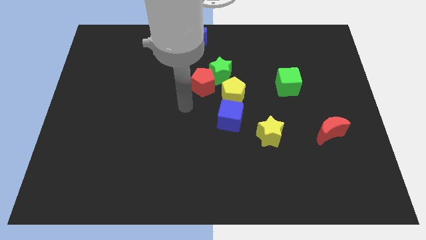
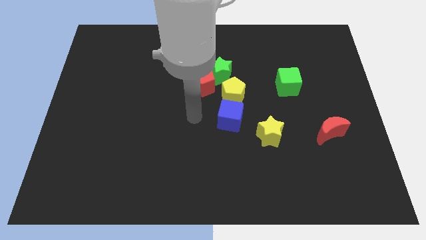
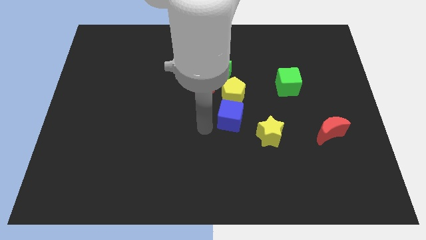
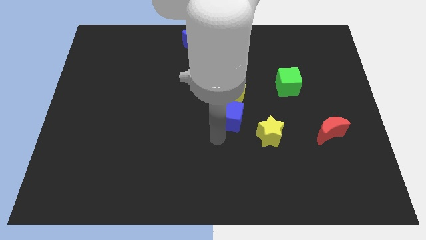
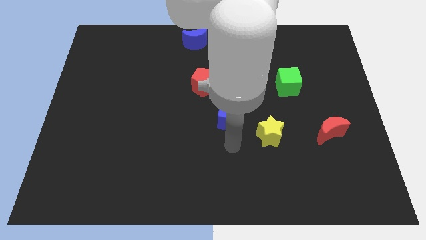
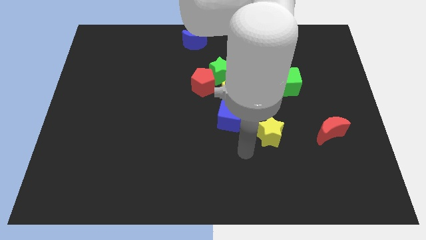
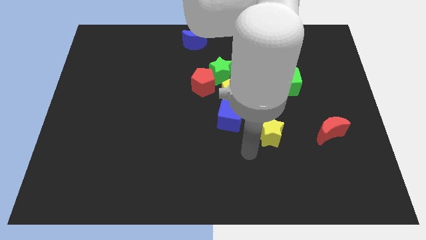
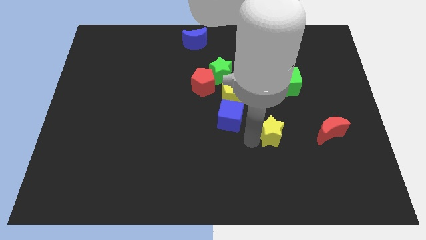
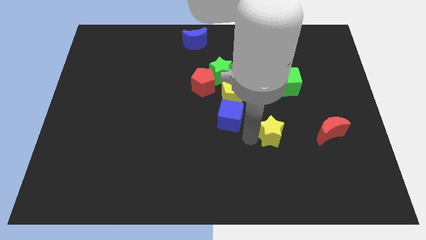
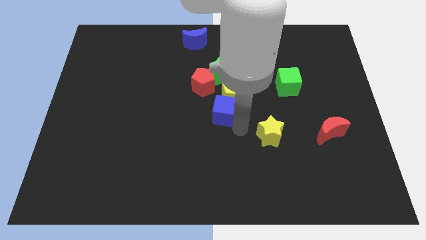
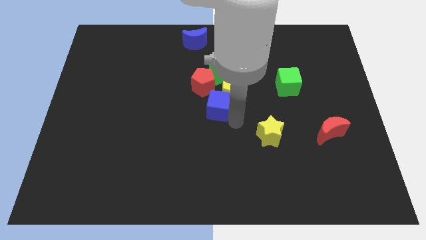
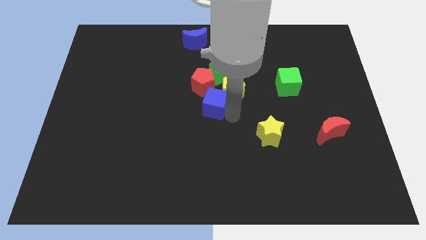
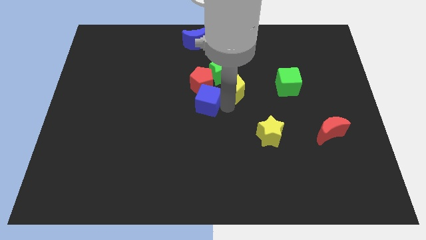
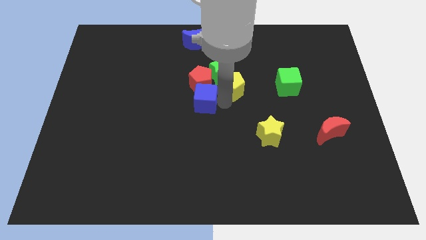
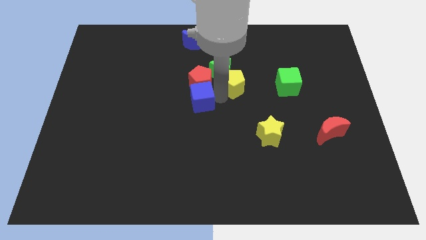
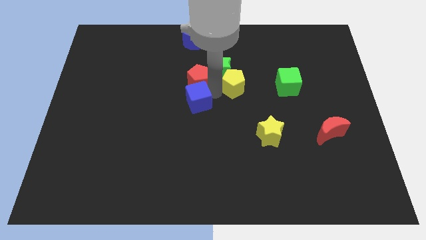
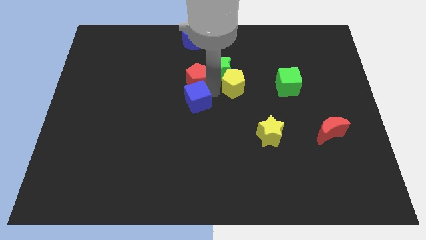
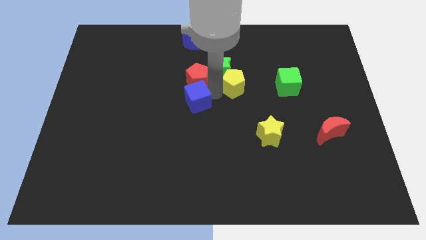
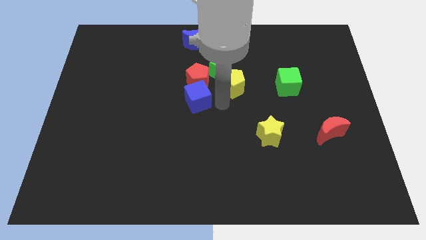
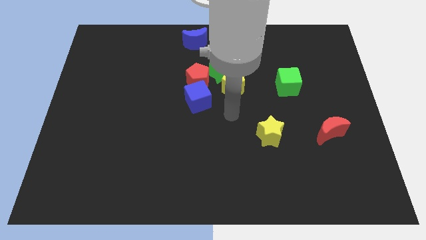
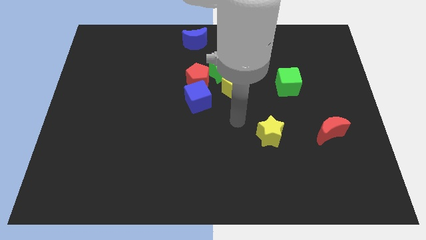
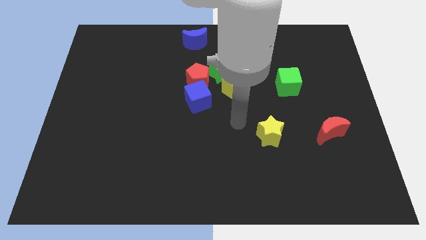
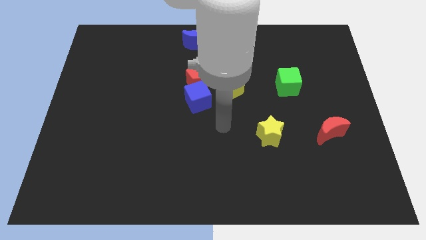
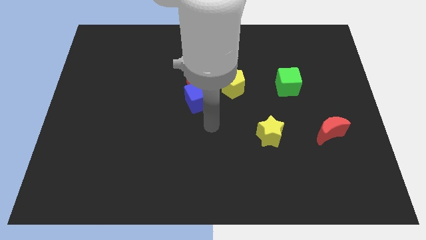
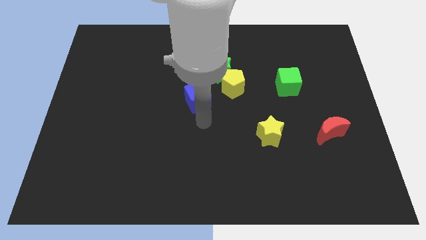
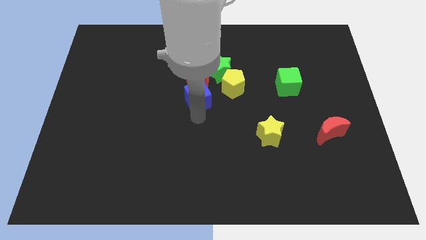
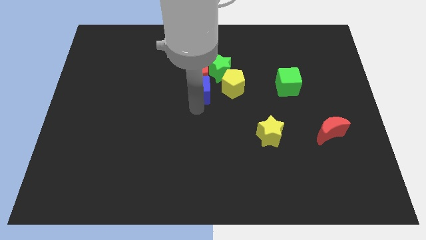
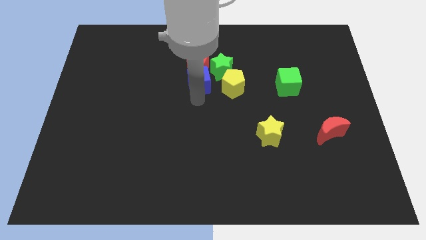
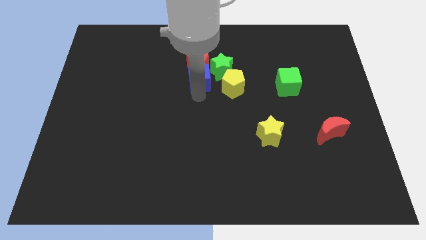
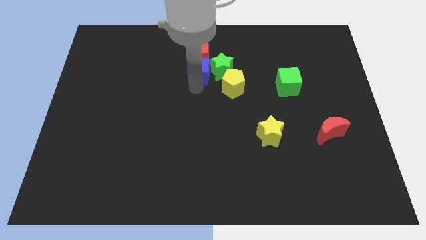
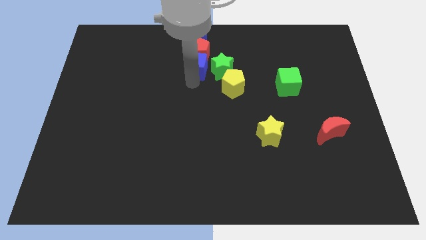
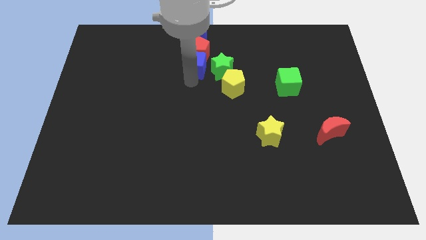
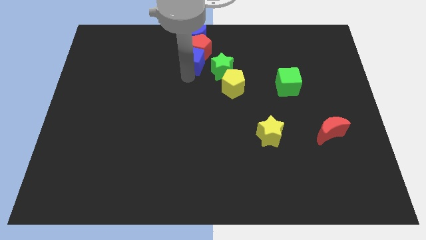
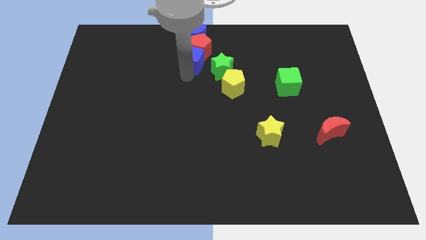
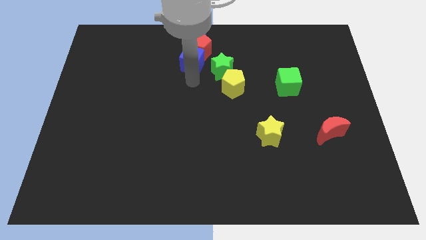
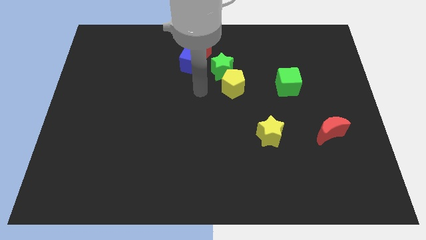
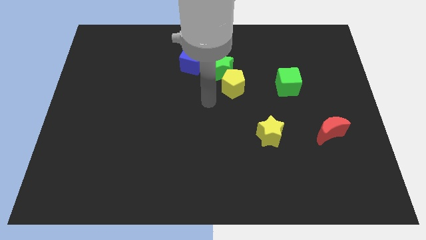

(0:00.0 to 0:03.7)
push red pentagon and blue cube together towards blue moon

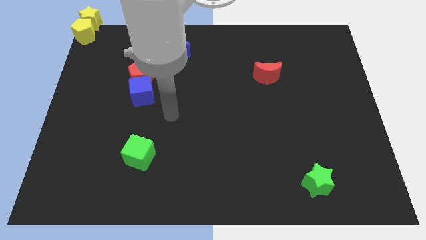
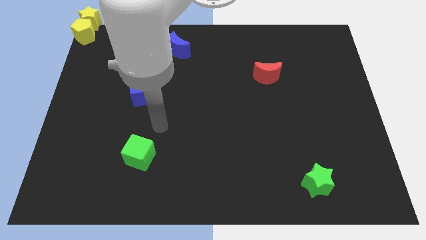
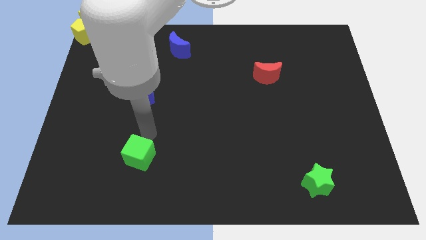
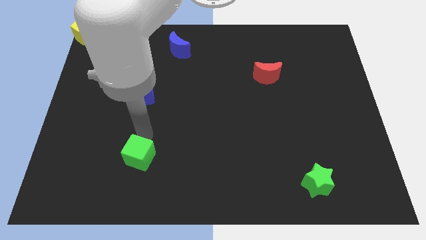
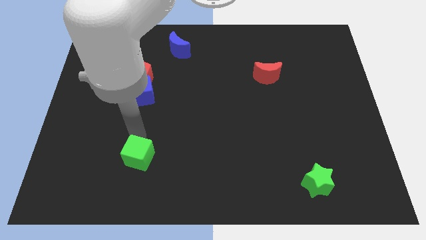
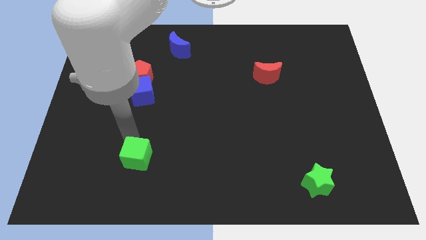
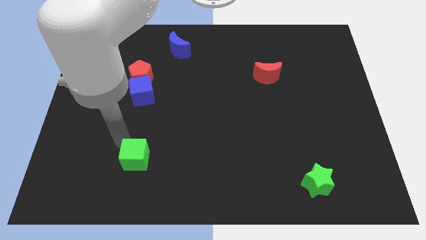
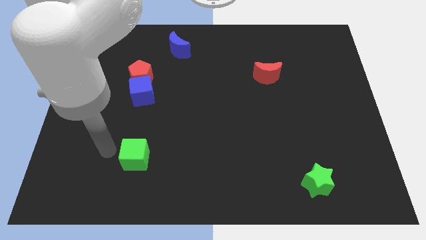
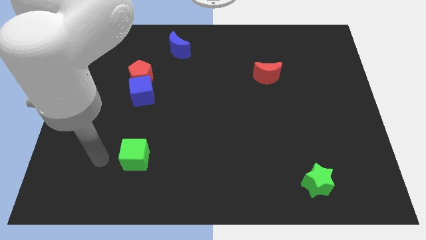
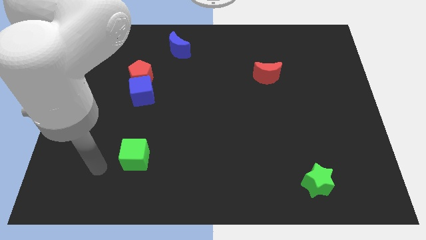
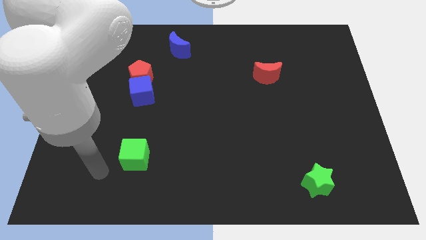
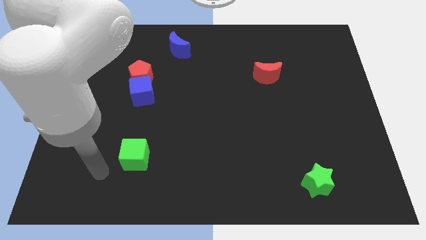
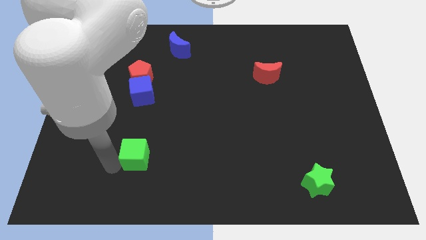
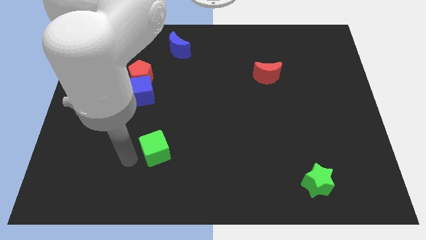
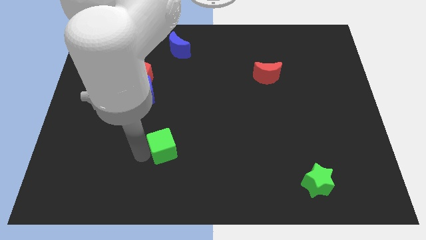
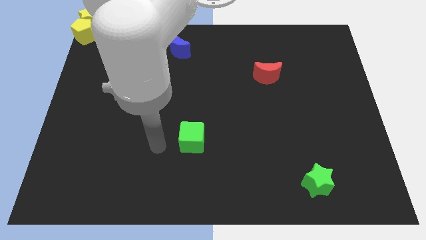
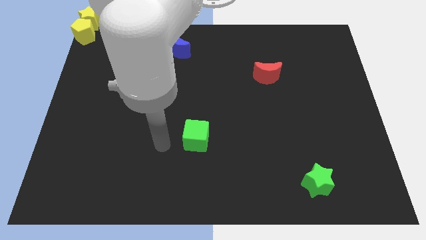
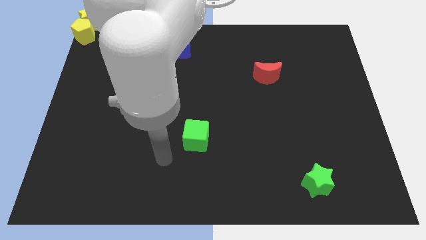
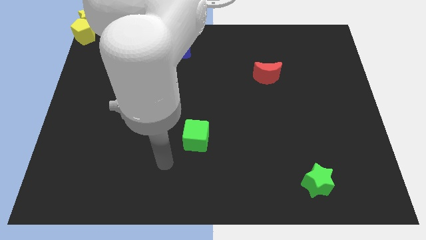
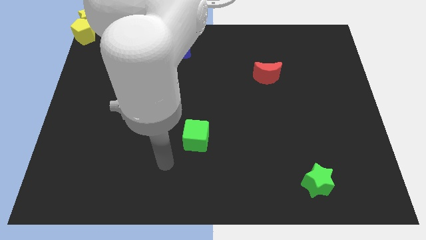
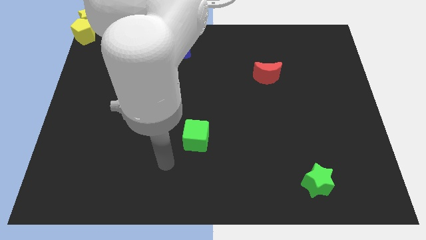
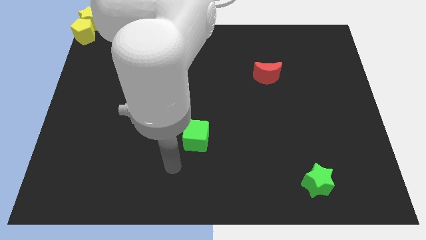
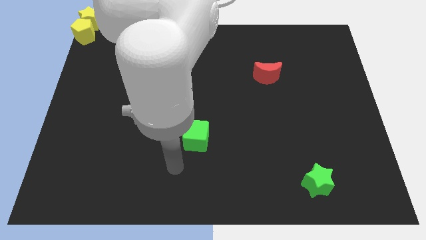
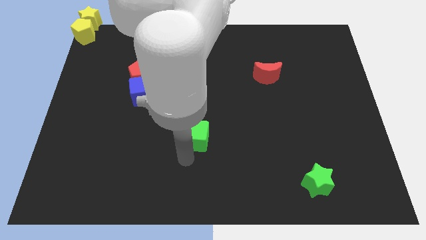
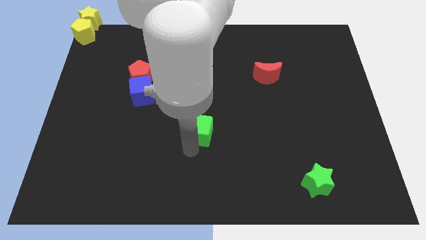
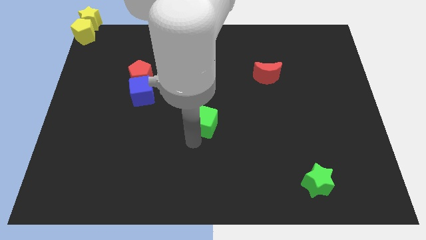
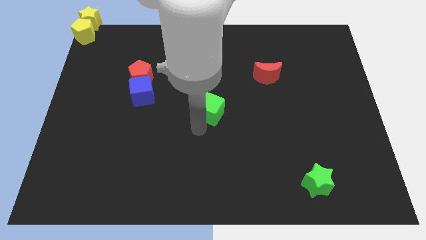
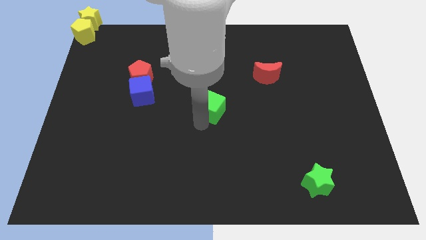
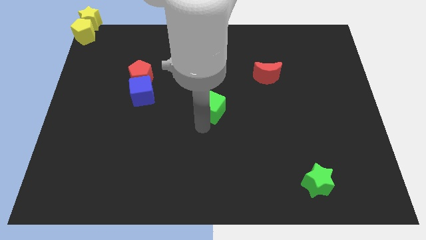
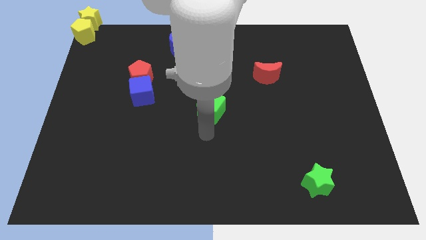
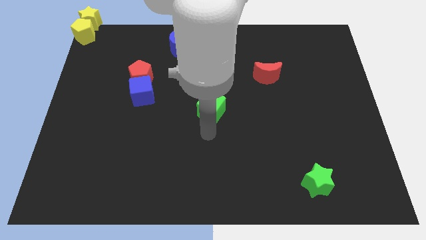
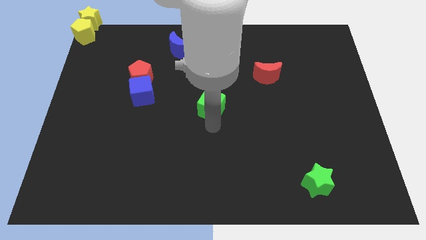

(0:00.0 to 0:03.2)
push the green cube to the center of the board

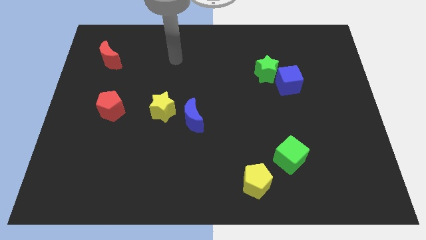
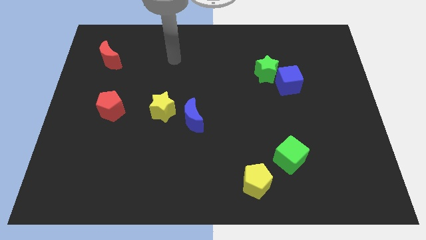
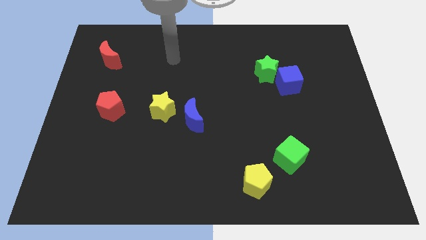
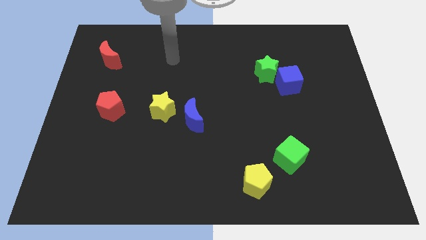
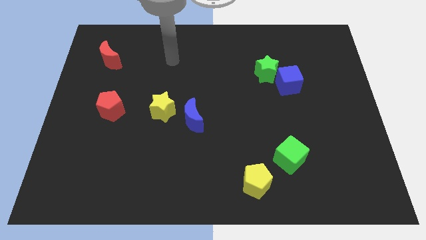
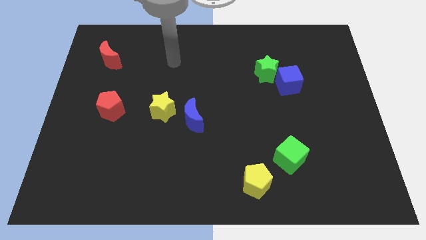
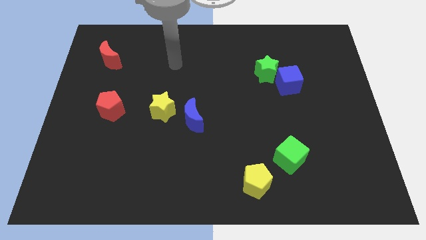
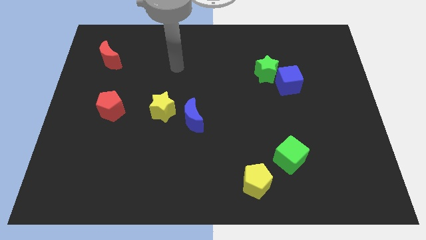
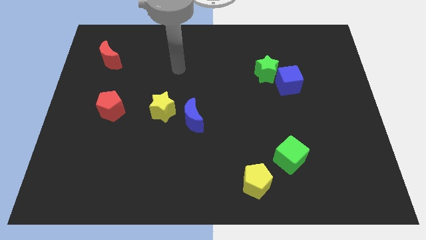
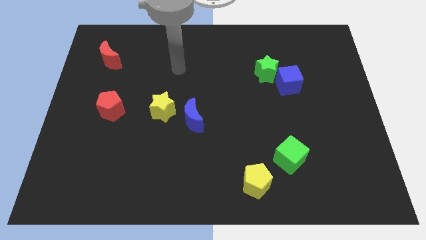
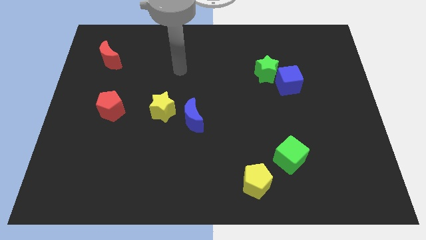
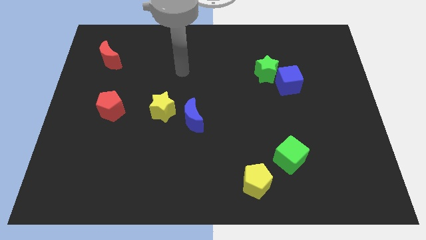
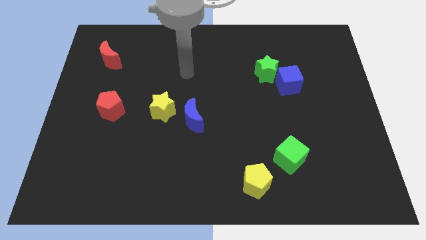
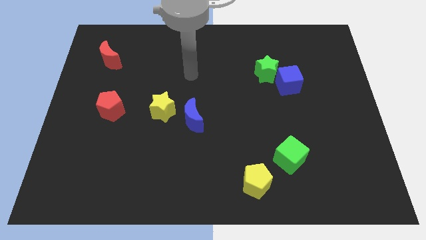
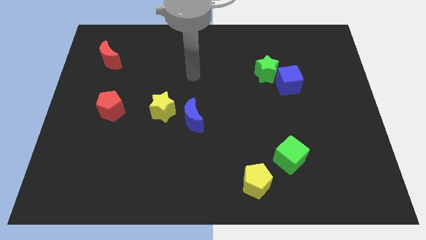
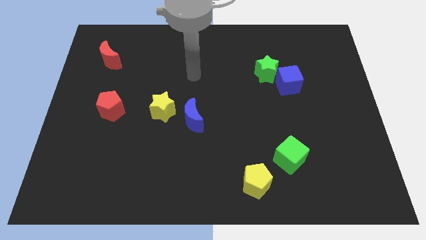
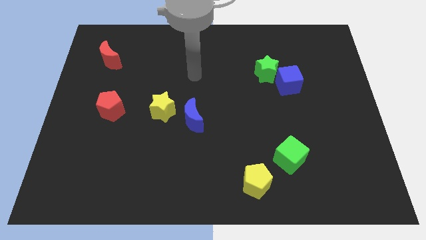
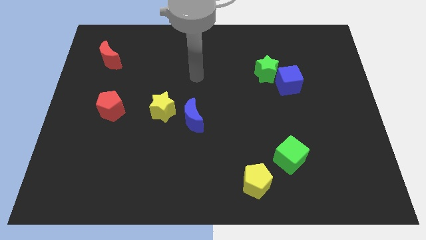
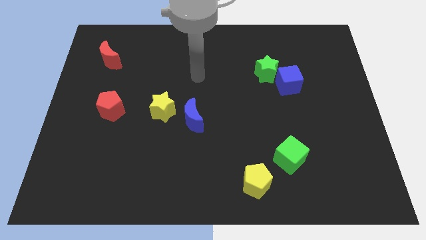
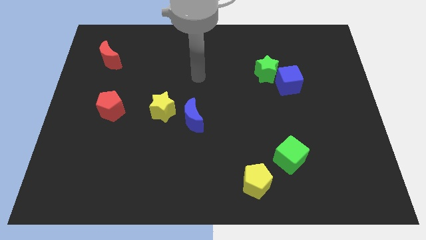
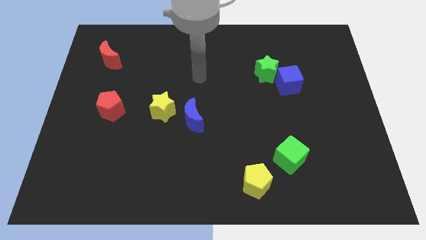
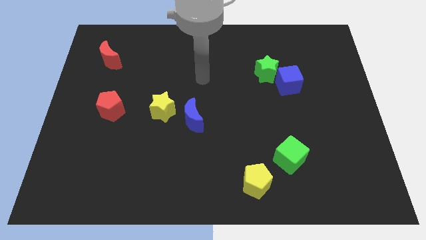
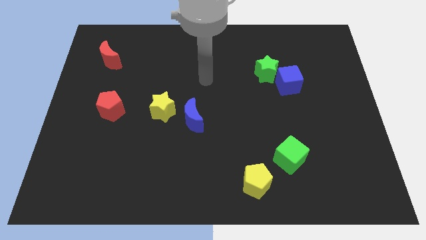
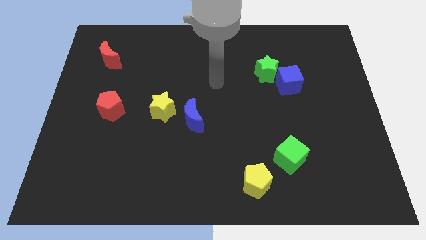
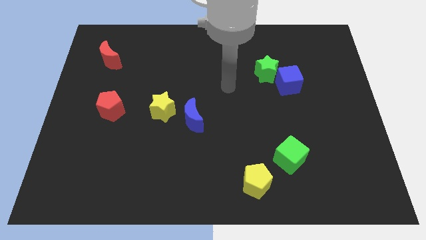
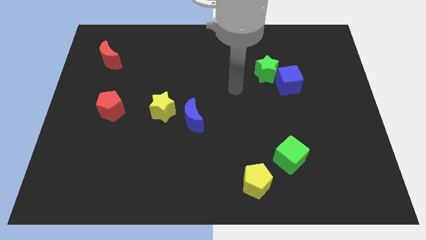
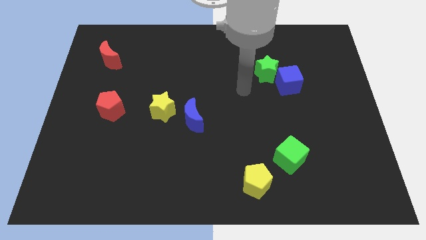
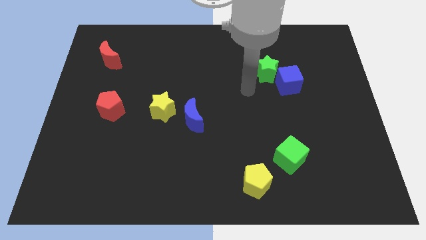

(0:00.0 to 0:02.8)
move your arm to the center
